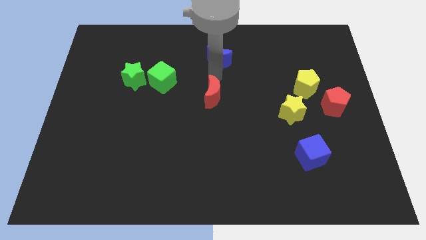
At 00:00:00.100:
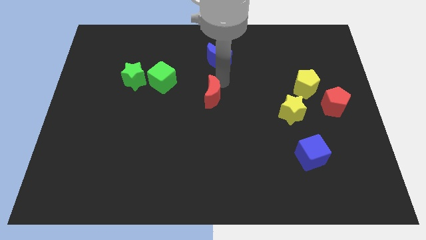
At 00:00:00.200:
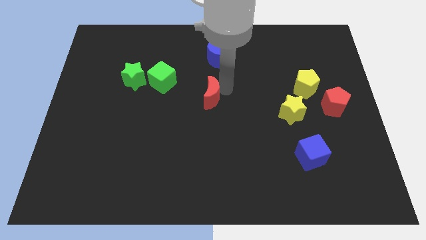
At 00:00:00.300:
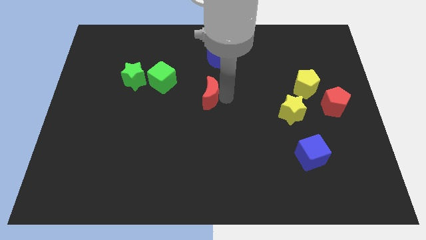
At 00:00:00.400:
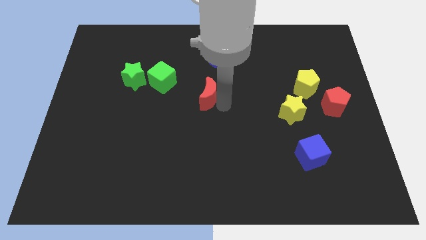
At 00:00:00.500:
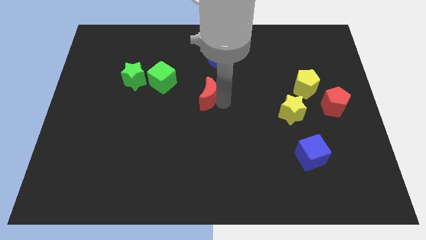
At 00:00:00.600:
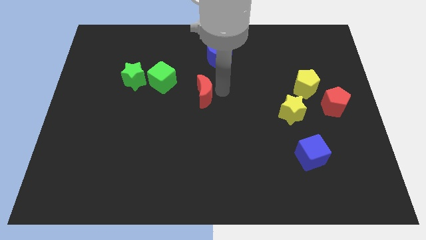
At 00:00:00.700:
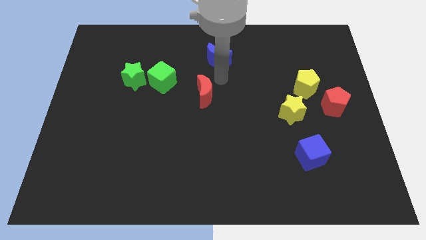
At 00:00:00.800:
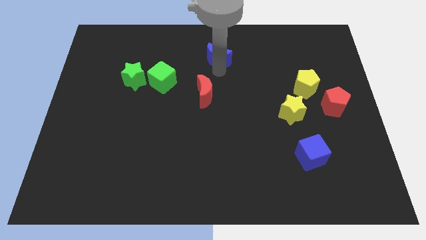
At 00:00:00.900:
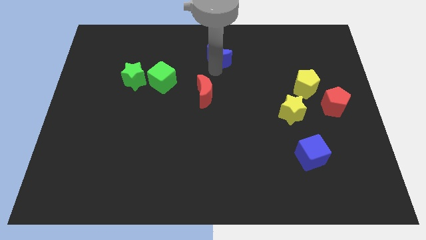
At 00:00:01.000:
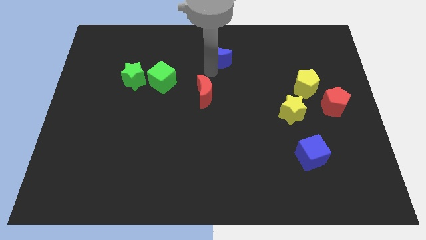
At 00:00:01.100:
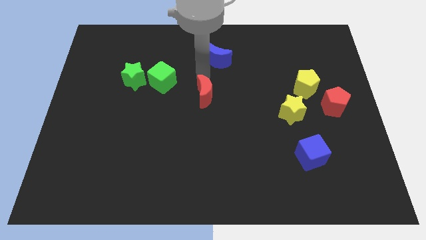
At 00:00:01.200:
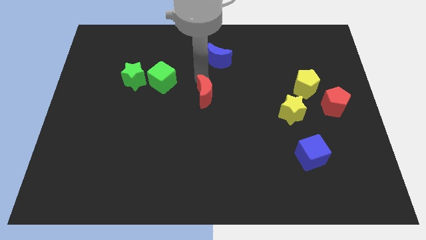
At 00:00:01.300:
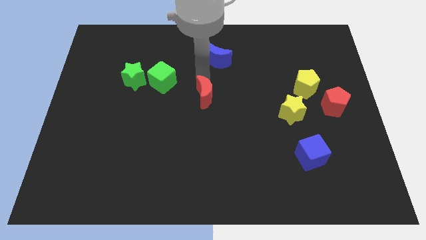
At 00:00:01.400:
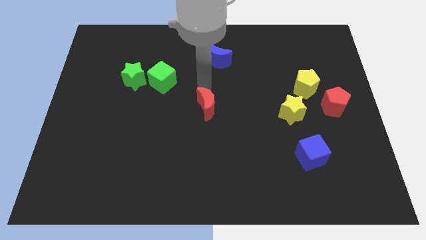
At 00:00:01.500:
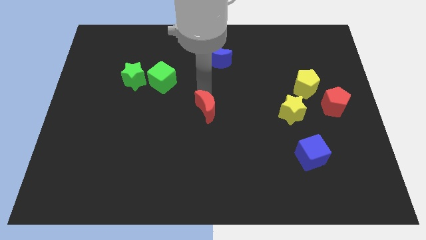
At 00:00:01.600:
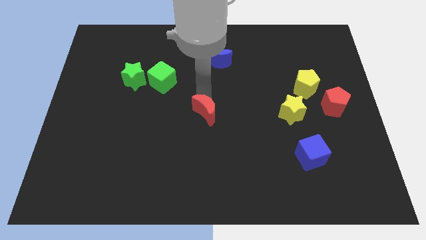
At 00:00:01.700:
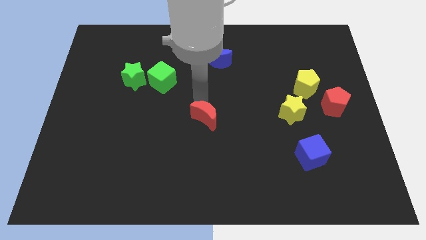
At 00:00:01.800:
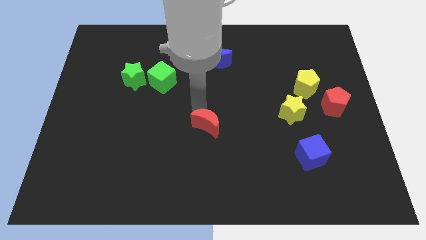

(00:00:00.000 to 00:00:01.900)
move red crescent slightly to the down

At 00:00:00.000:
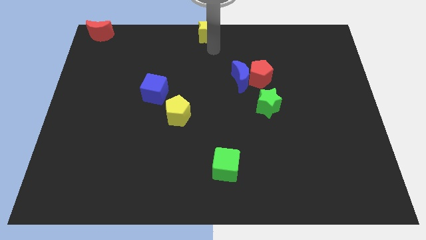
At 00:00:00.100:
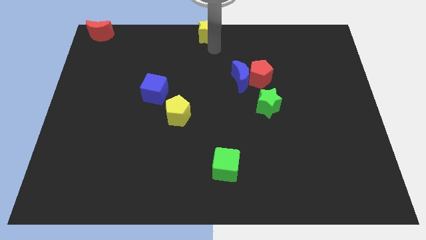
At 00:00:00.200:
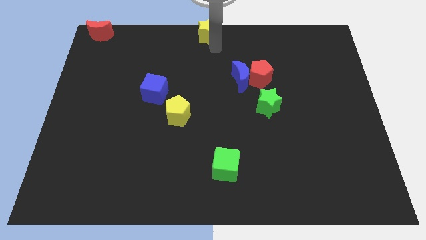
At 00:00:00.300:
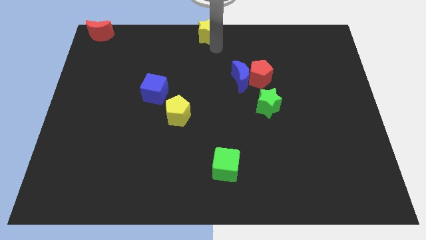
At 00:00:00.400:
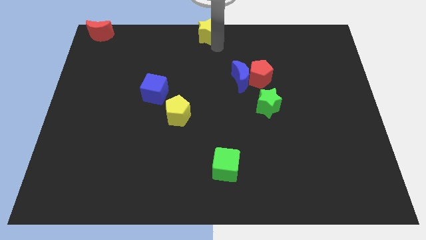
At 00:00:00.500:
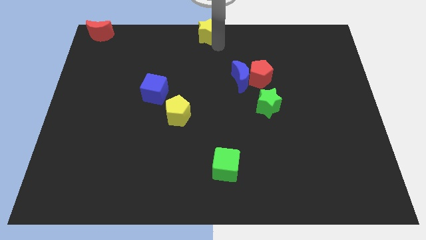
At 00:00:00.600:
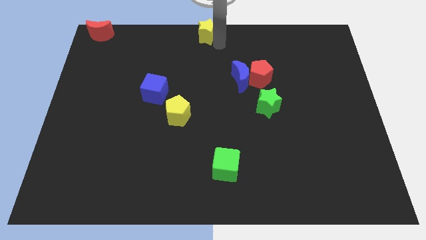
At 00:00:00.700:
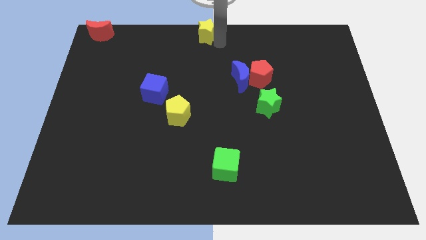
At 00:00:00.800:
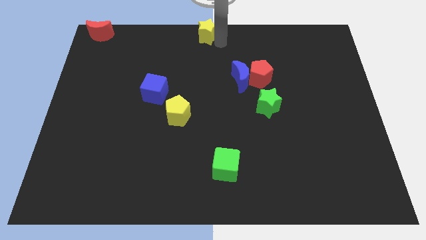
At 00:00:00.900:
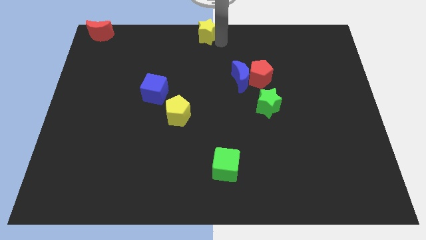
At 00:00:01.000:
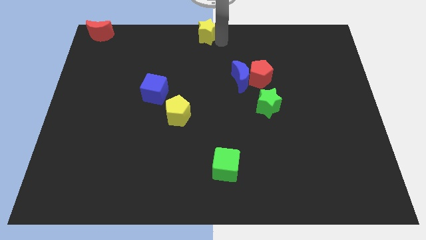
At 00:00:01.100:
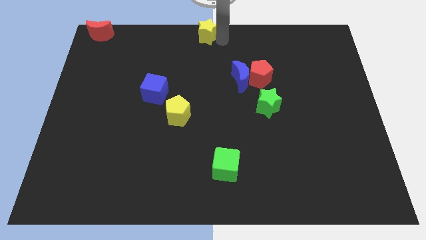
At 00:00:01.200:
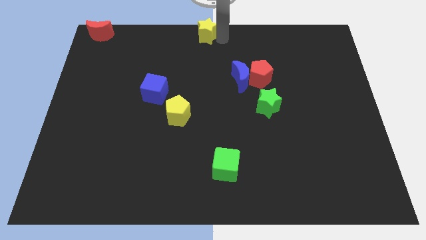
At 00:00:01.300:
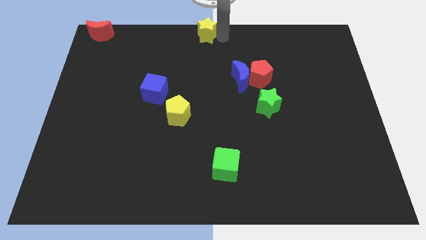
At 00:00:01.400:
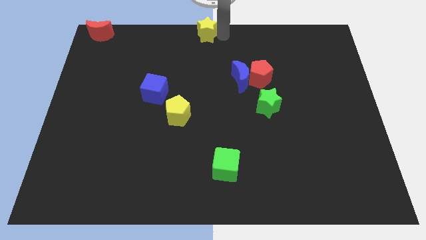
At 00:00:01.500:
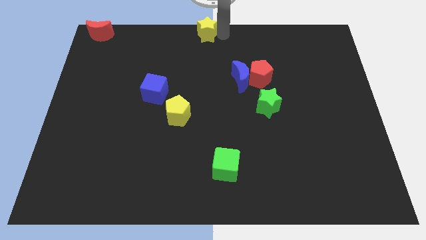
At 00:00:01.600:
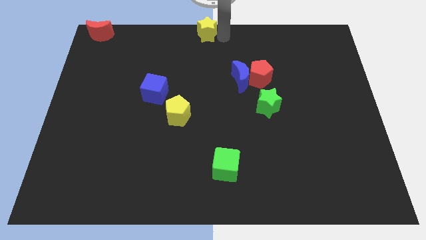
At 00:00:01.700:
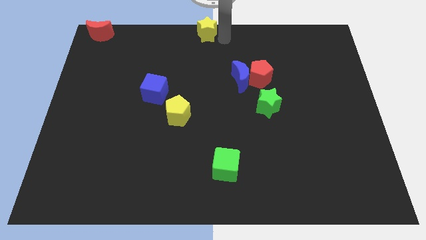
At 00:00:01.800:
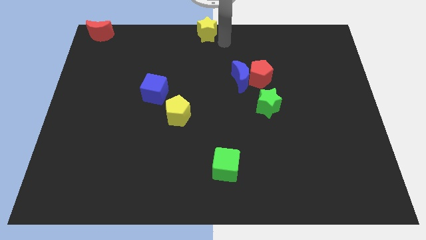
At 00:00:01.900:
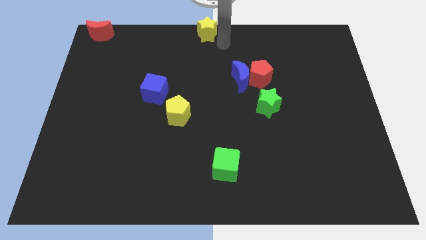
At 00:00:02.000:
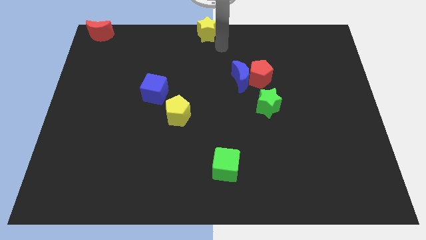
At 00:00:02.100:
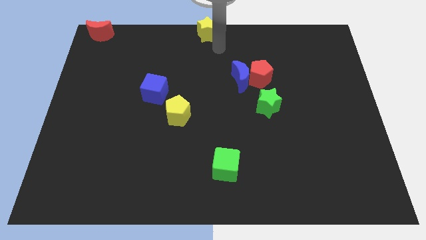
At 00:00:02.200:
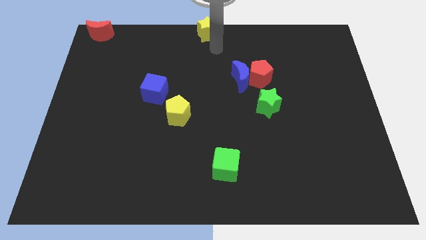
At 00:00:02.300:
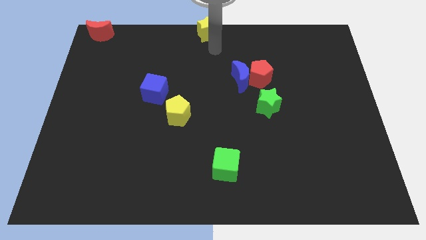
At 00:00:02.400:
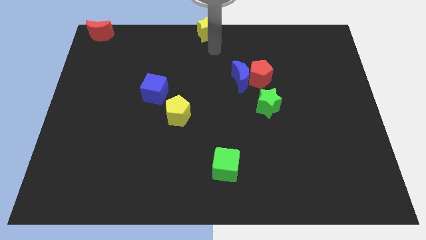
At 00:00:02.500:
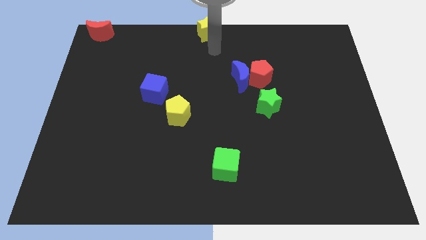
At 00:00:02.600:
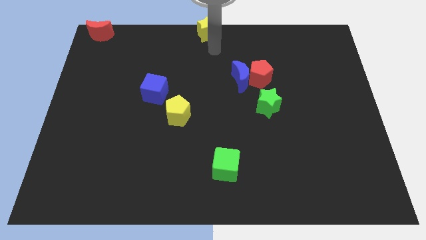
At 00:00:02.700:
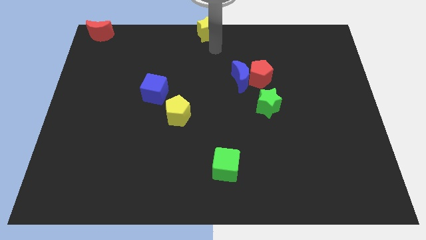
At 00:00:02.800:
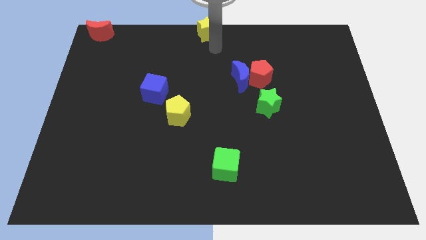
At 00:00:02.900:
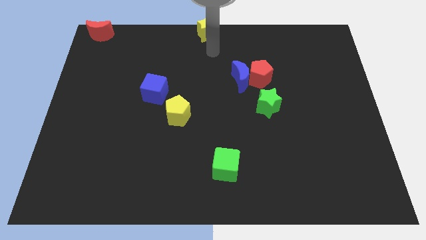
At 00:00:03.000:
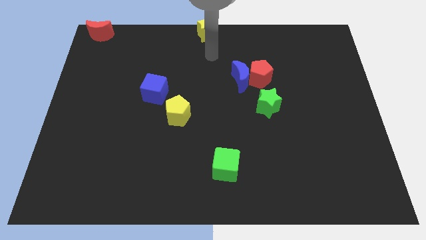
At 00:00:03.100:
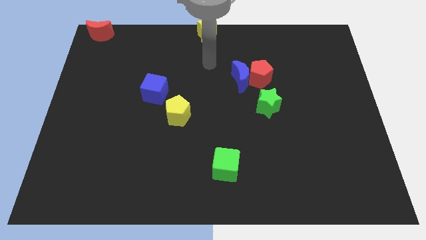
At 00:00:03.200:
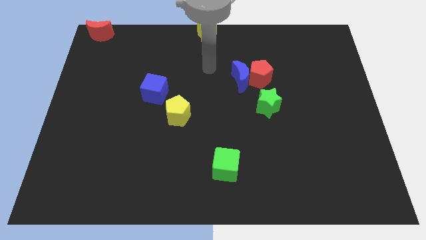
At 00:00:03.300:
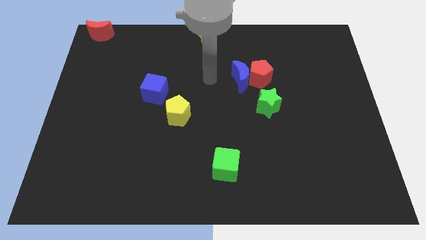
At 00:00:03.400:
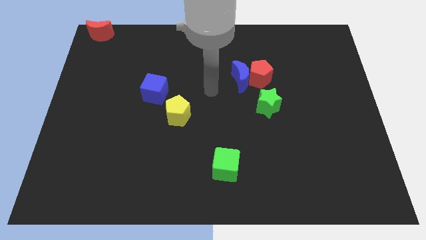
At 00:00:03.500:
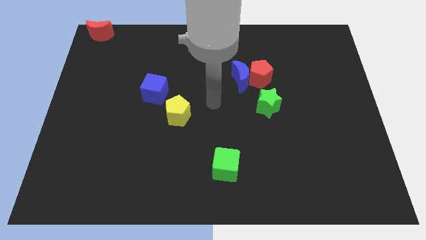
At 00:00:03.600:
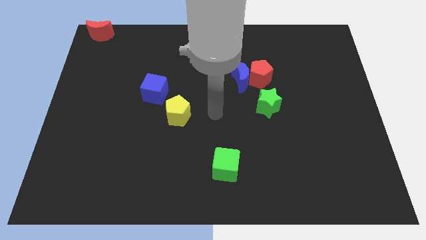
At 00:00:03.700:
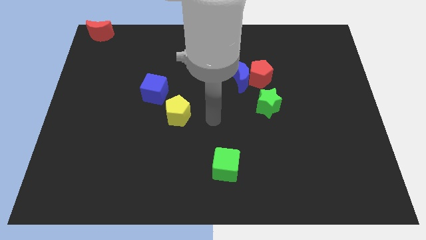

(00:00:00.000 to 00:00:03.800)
point your arm beside yellow pentagon

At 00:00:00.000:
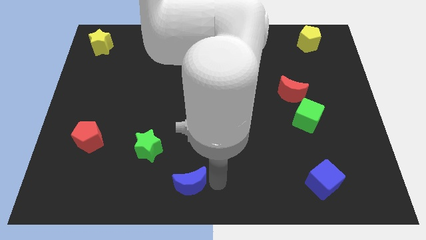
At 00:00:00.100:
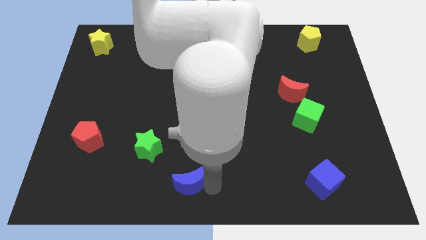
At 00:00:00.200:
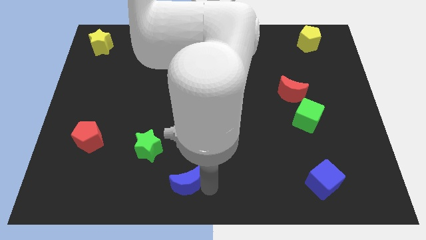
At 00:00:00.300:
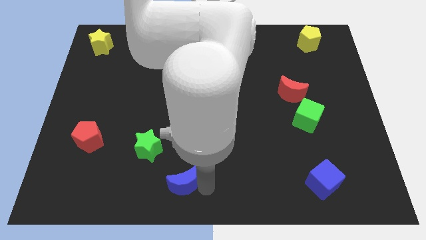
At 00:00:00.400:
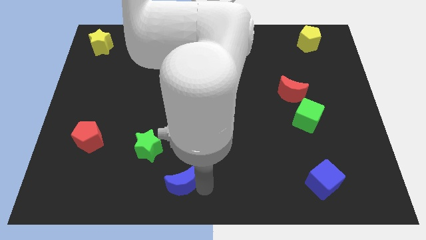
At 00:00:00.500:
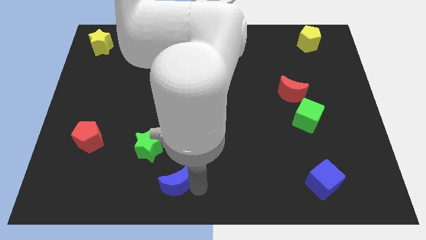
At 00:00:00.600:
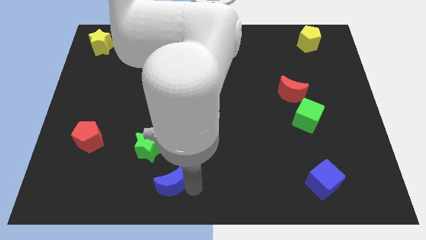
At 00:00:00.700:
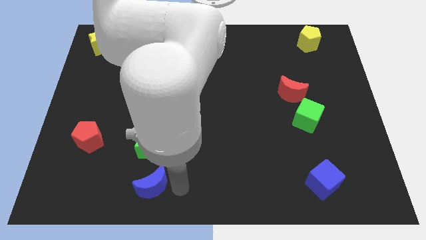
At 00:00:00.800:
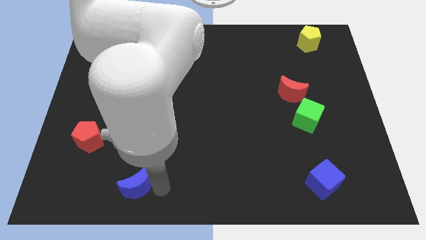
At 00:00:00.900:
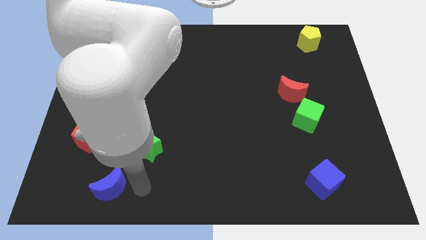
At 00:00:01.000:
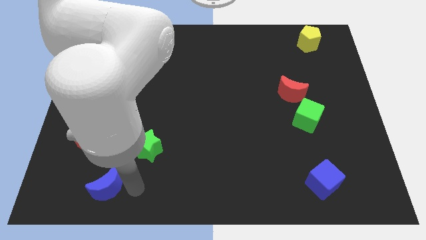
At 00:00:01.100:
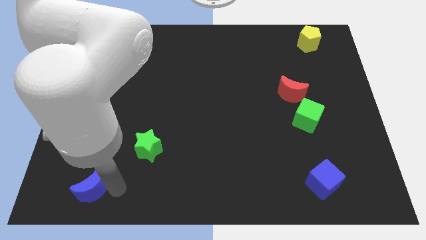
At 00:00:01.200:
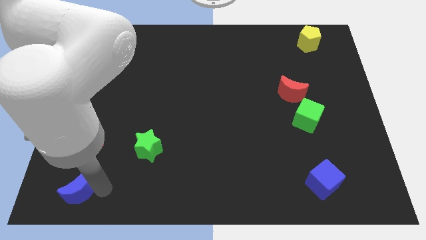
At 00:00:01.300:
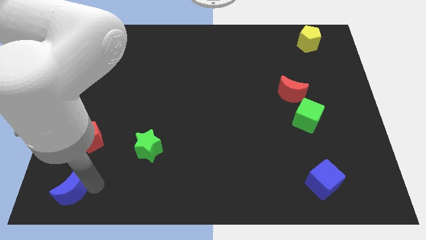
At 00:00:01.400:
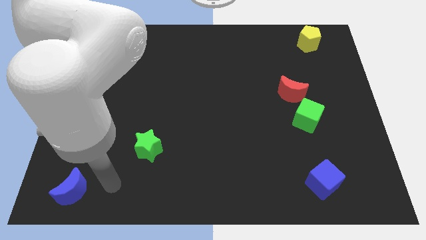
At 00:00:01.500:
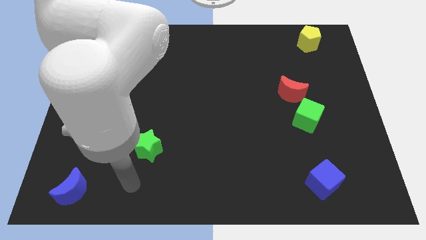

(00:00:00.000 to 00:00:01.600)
move the blue crescent to the bottom left of the board

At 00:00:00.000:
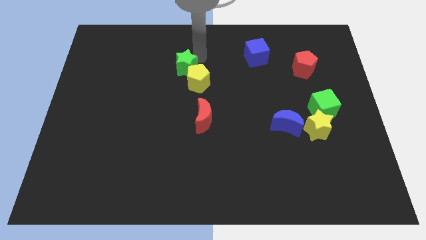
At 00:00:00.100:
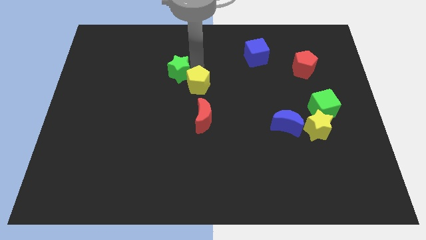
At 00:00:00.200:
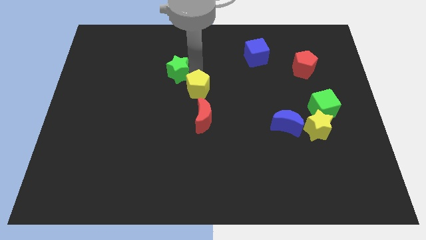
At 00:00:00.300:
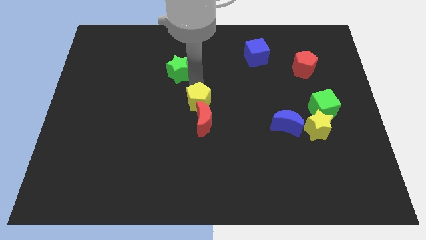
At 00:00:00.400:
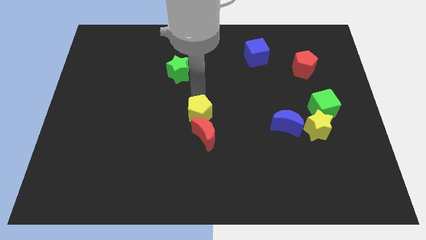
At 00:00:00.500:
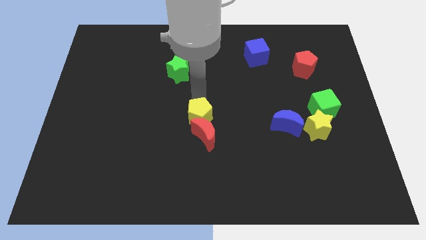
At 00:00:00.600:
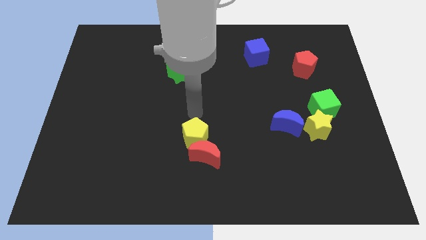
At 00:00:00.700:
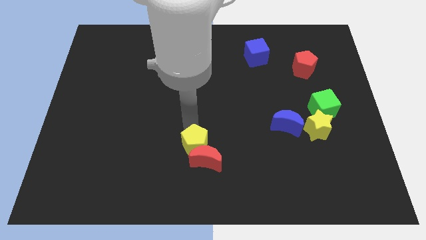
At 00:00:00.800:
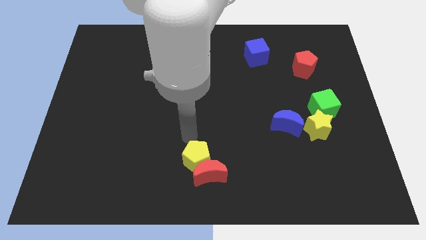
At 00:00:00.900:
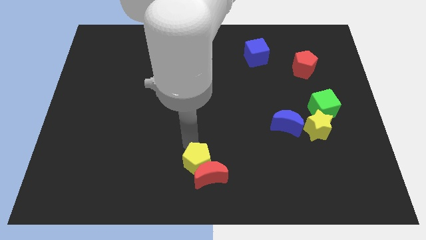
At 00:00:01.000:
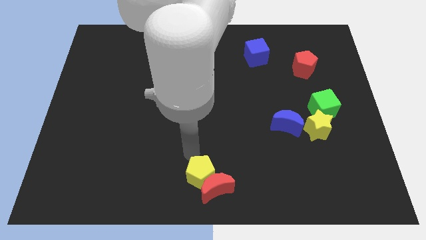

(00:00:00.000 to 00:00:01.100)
move the yellow pentagon along with the red crescent to the bottom center

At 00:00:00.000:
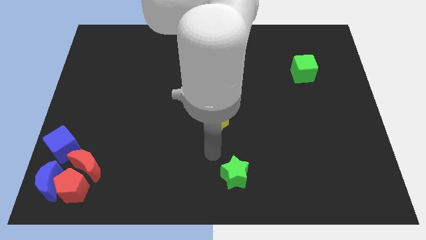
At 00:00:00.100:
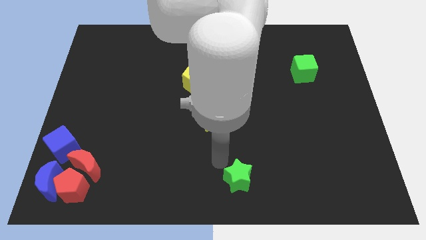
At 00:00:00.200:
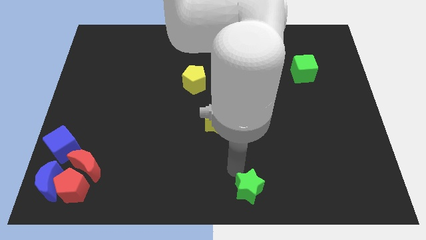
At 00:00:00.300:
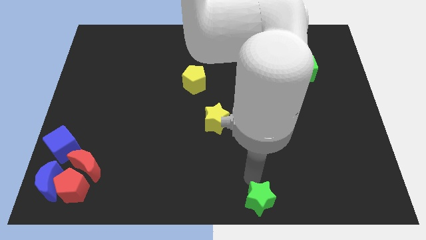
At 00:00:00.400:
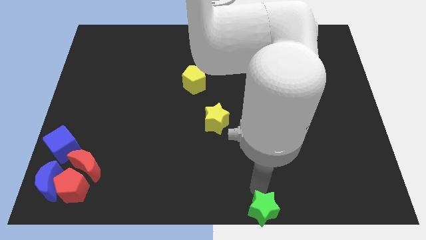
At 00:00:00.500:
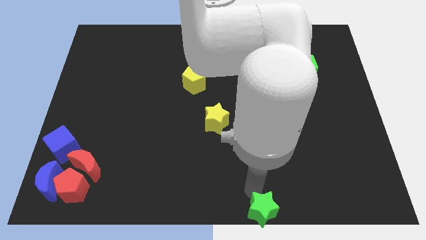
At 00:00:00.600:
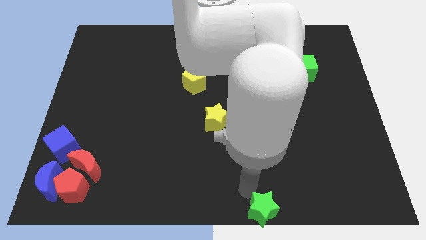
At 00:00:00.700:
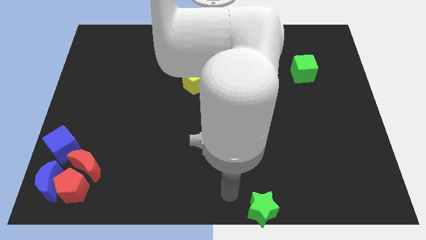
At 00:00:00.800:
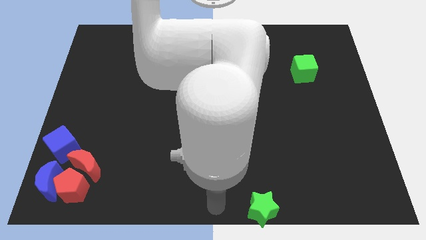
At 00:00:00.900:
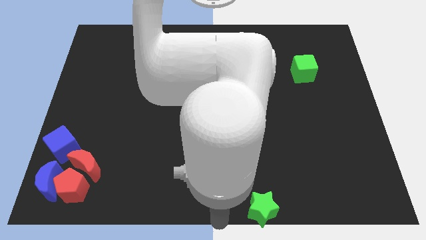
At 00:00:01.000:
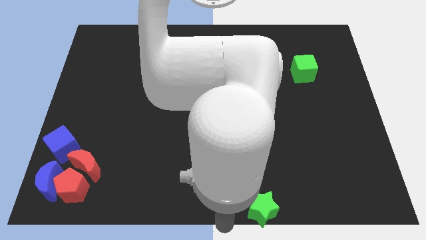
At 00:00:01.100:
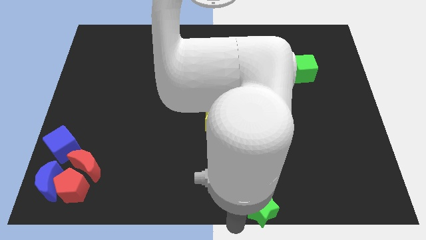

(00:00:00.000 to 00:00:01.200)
push the green star to the bottom of the board
